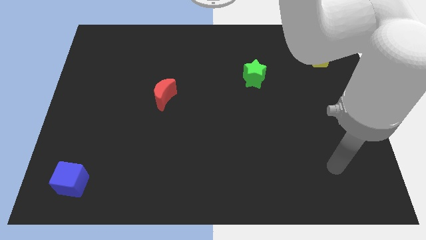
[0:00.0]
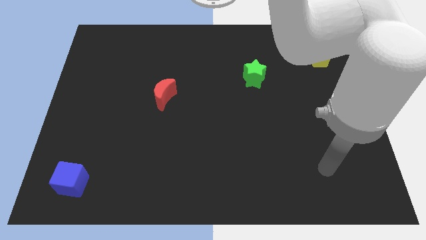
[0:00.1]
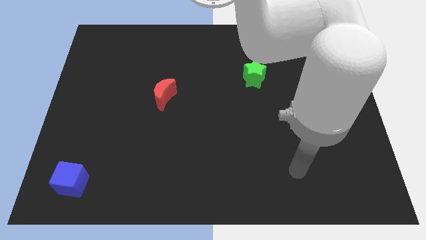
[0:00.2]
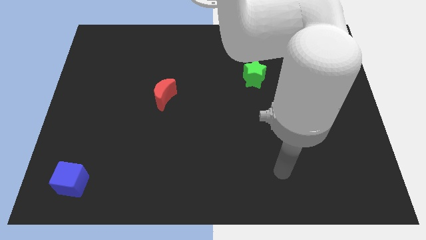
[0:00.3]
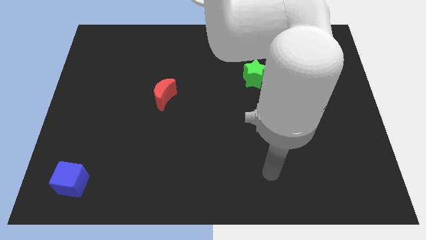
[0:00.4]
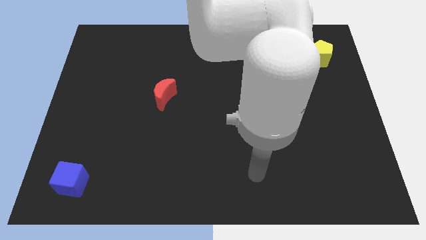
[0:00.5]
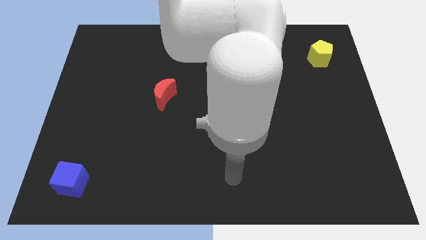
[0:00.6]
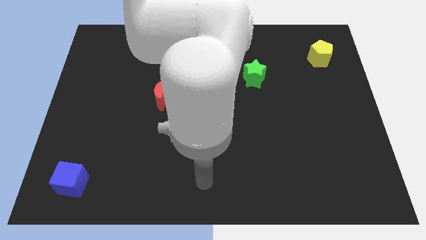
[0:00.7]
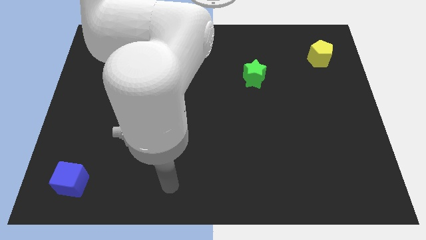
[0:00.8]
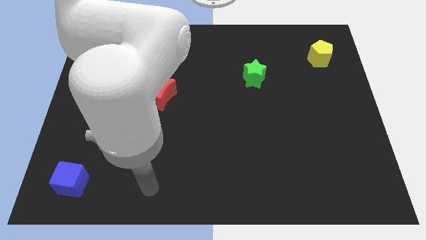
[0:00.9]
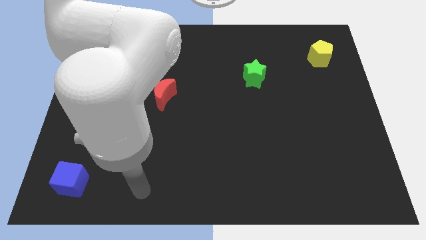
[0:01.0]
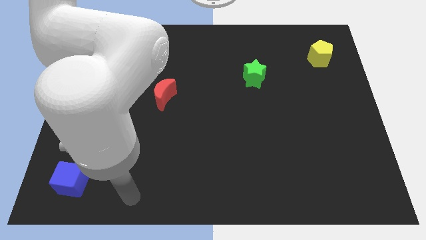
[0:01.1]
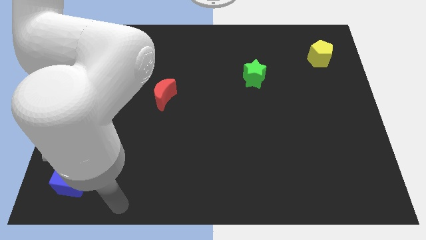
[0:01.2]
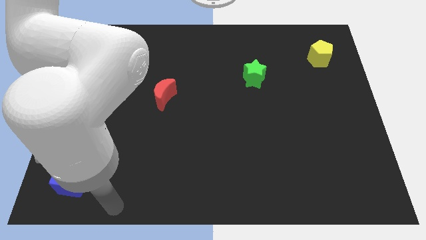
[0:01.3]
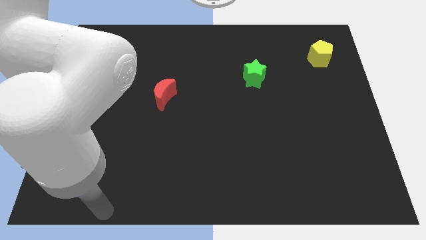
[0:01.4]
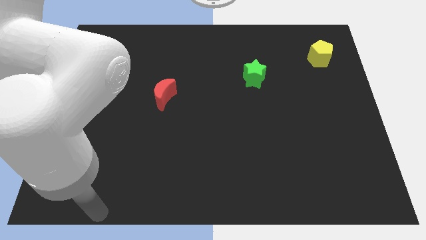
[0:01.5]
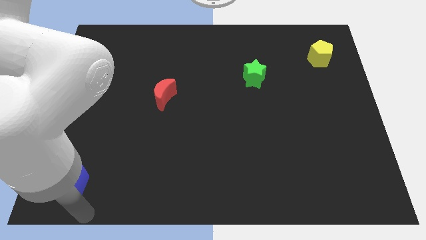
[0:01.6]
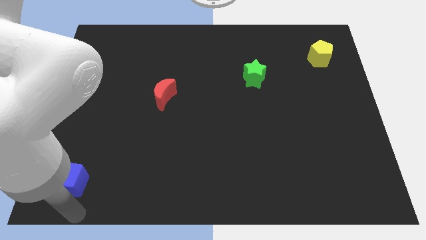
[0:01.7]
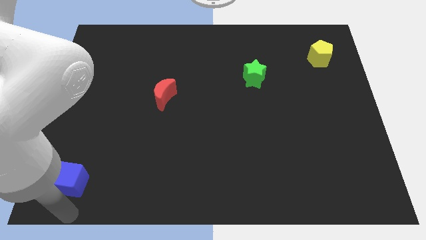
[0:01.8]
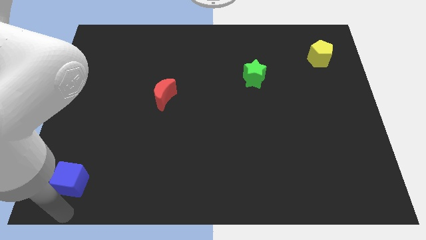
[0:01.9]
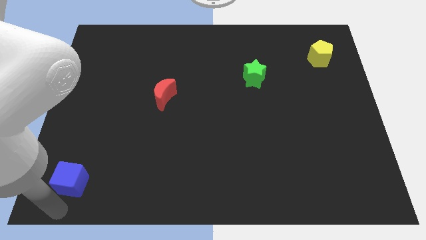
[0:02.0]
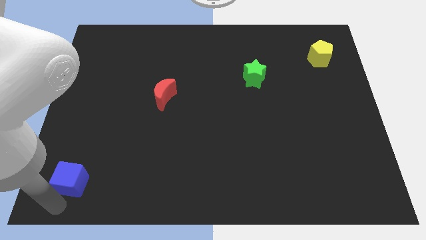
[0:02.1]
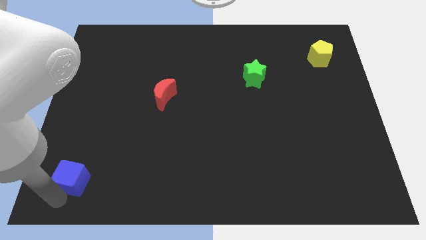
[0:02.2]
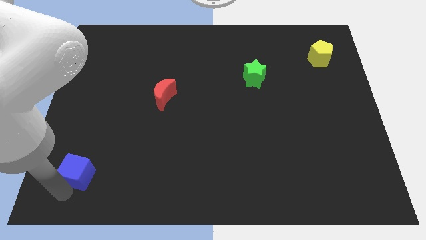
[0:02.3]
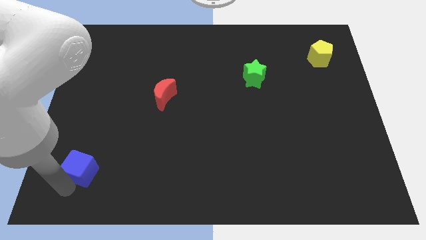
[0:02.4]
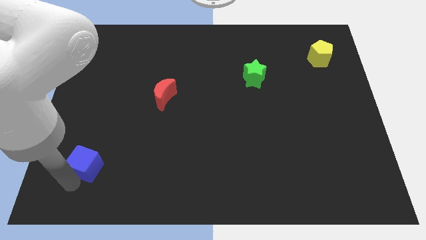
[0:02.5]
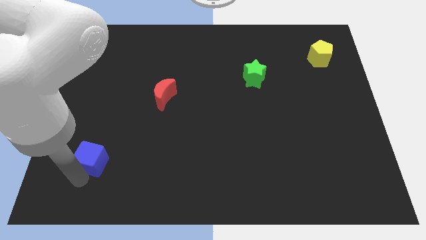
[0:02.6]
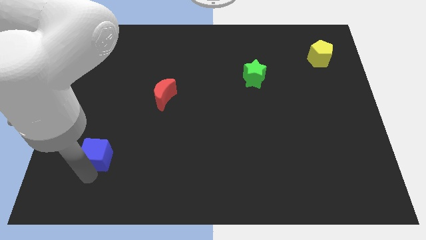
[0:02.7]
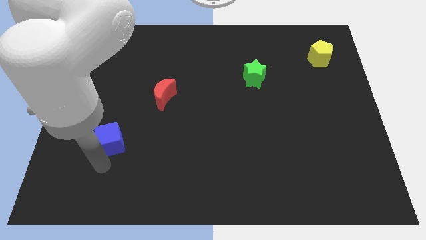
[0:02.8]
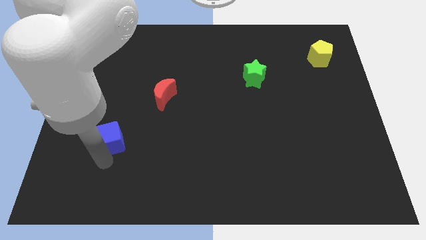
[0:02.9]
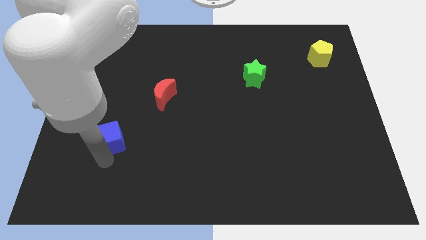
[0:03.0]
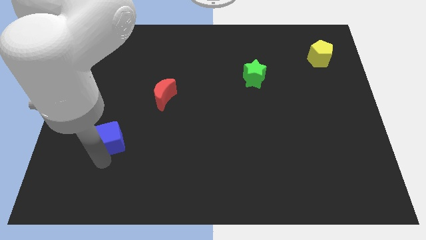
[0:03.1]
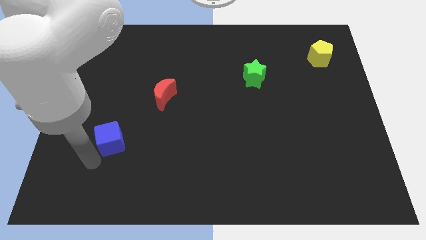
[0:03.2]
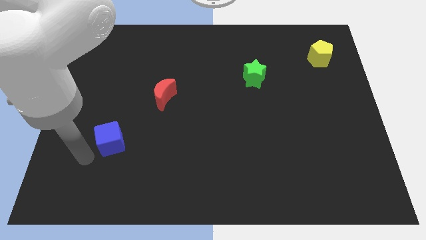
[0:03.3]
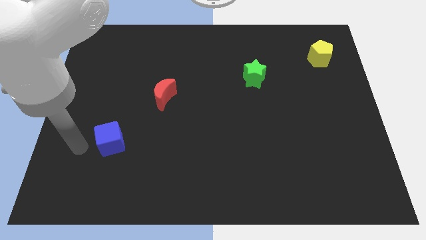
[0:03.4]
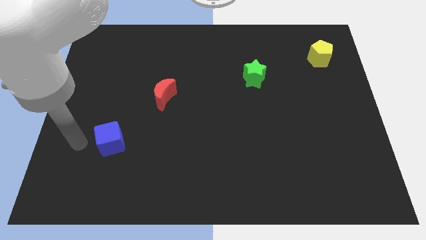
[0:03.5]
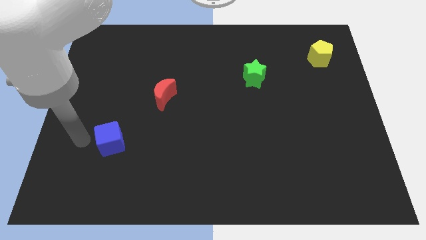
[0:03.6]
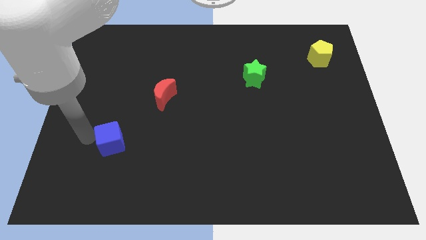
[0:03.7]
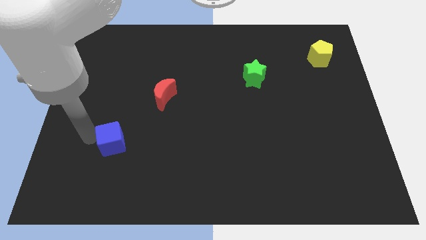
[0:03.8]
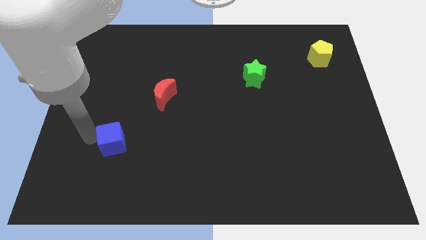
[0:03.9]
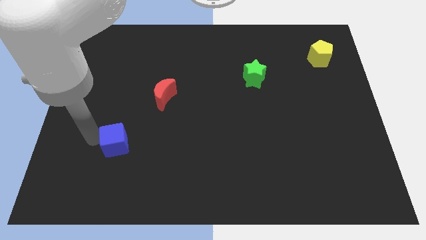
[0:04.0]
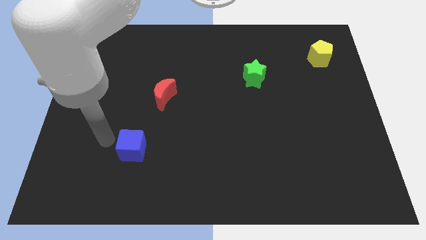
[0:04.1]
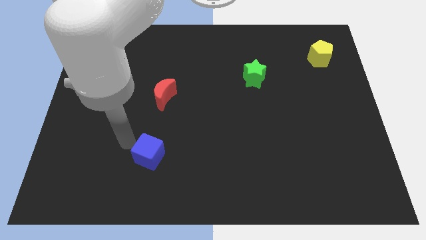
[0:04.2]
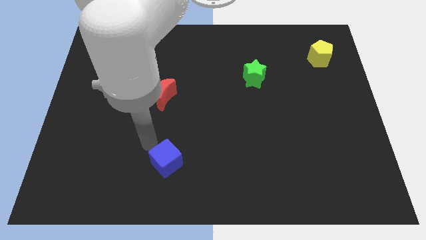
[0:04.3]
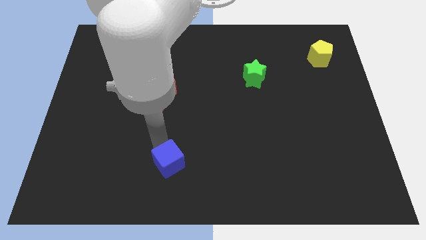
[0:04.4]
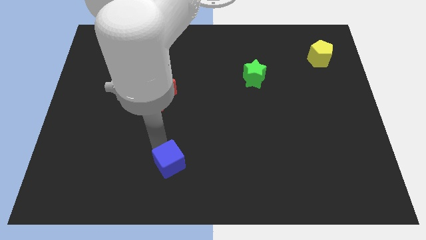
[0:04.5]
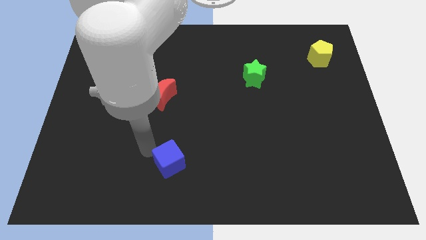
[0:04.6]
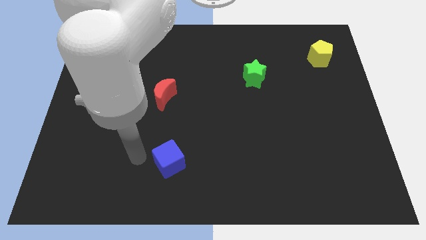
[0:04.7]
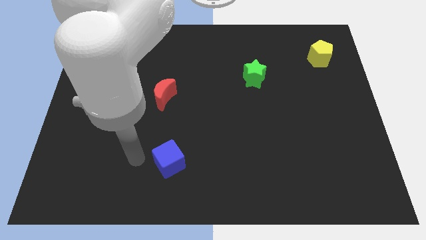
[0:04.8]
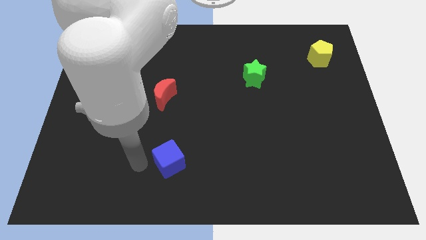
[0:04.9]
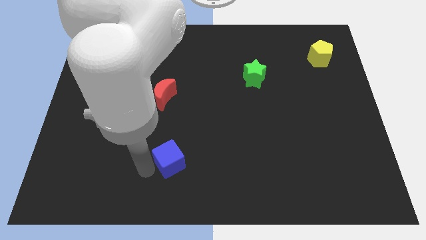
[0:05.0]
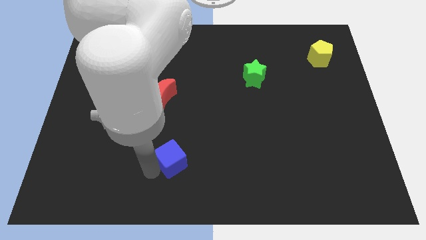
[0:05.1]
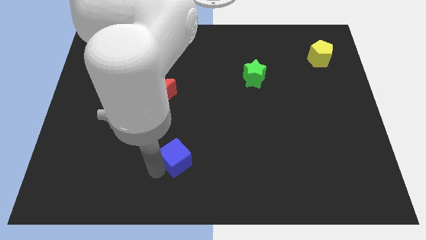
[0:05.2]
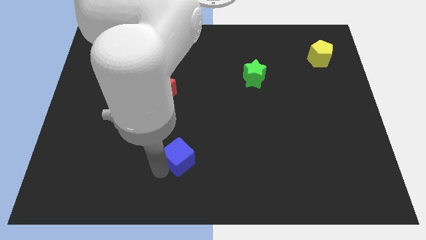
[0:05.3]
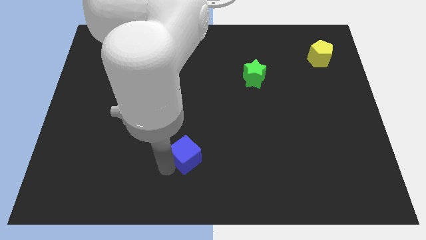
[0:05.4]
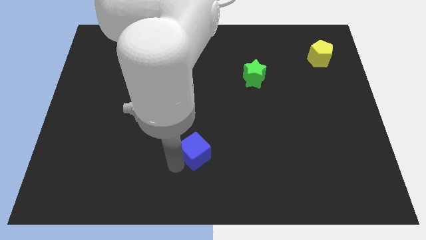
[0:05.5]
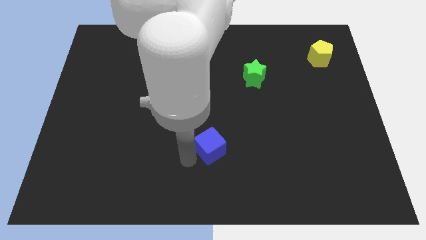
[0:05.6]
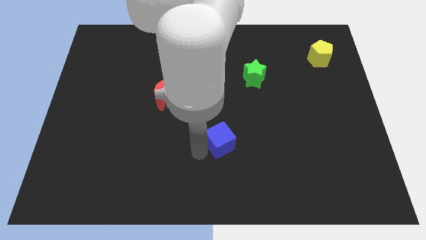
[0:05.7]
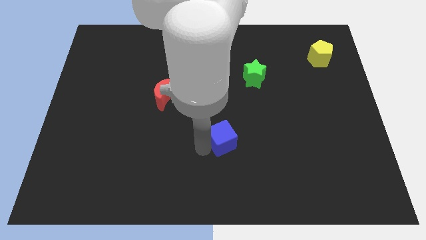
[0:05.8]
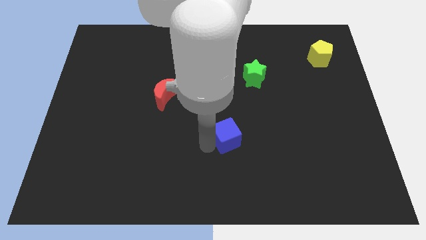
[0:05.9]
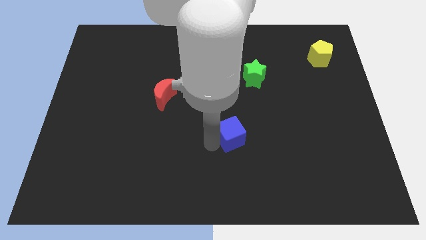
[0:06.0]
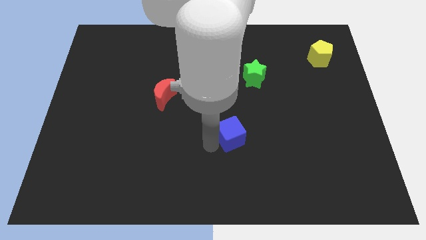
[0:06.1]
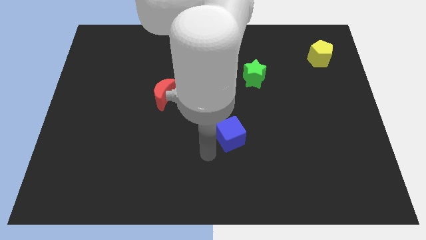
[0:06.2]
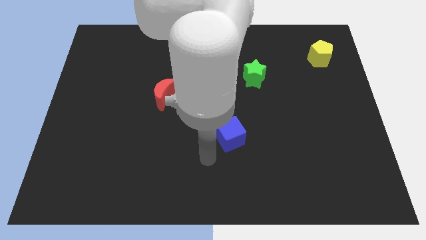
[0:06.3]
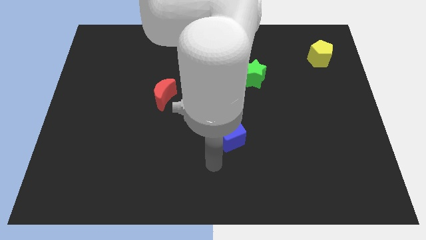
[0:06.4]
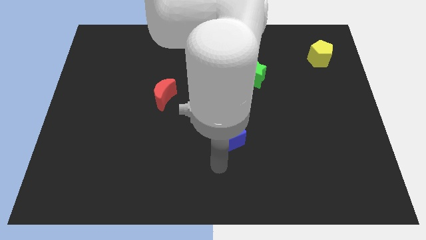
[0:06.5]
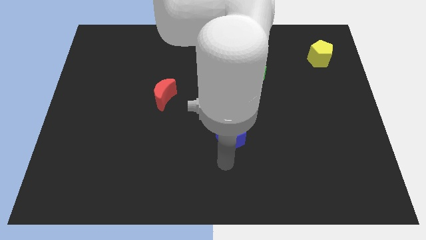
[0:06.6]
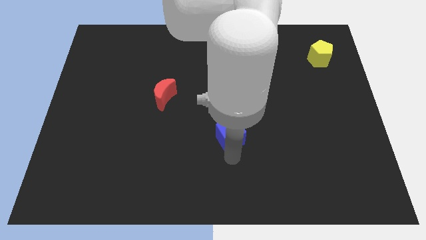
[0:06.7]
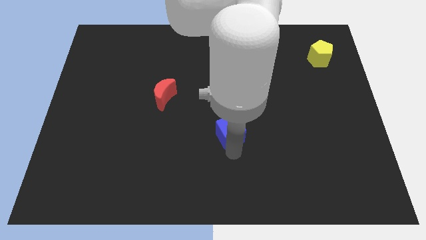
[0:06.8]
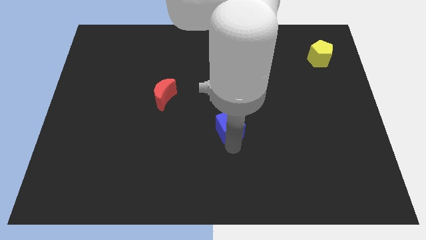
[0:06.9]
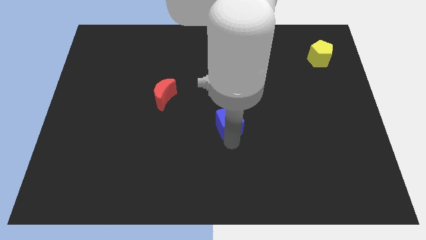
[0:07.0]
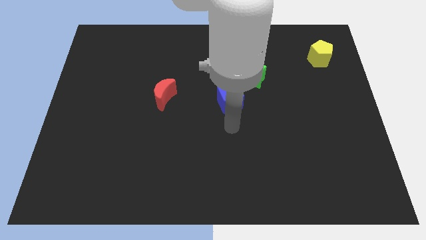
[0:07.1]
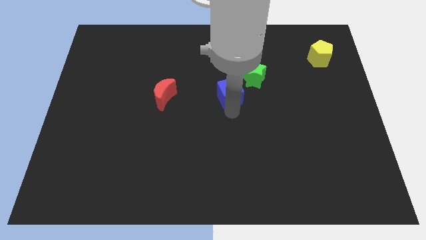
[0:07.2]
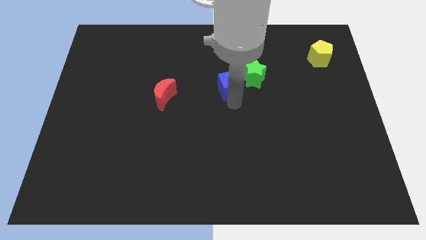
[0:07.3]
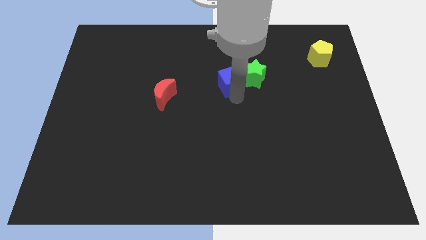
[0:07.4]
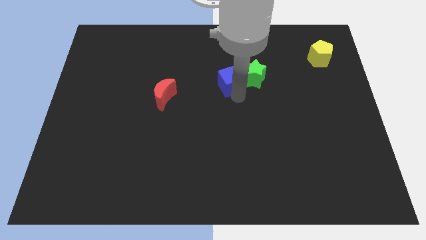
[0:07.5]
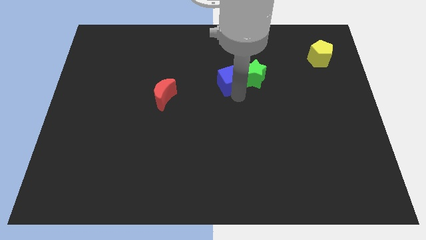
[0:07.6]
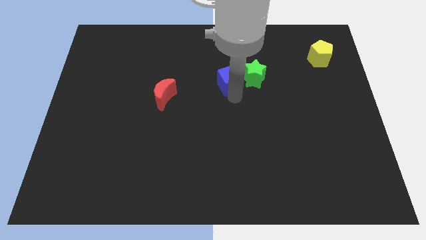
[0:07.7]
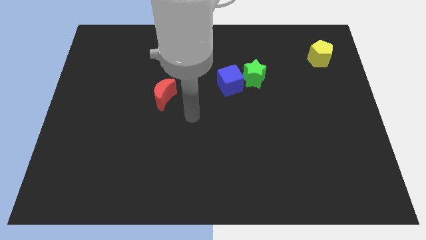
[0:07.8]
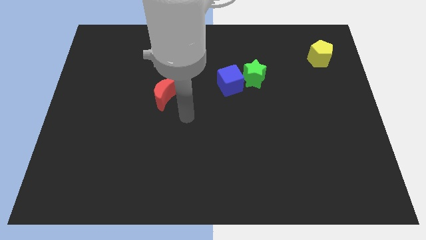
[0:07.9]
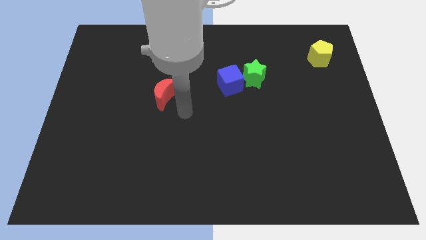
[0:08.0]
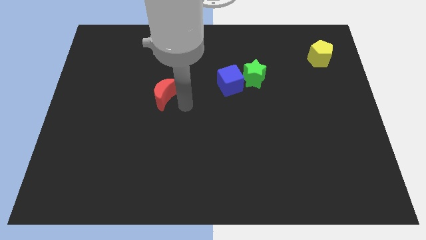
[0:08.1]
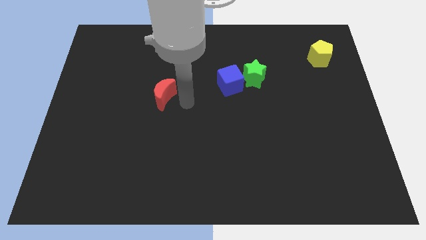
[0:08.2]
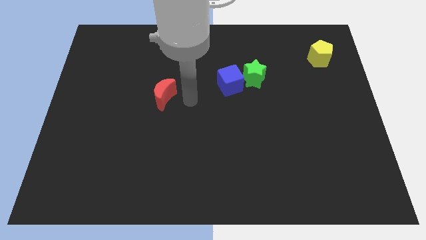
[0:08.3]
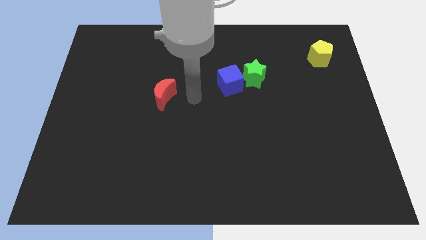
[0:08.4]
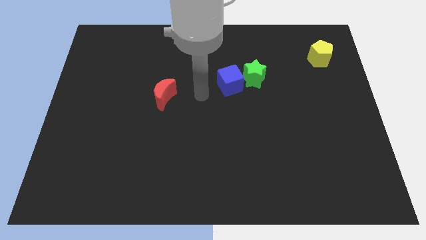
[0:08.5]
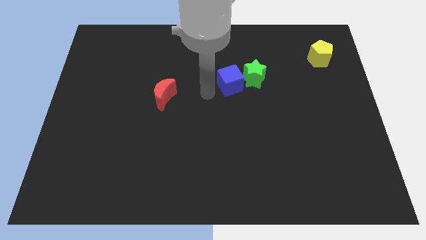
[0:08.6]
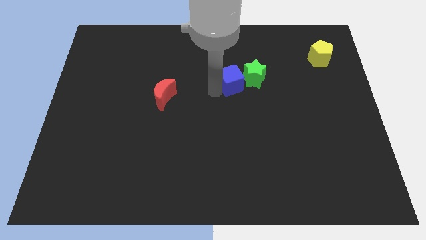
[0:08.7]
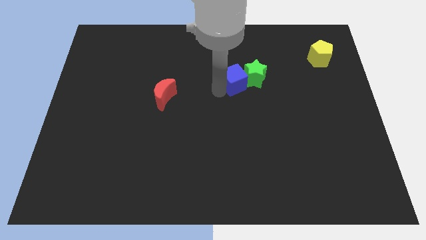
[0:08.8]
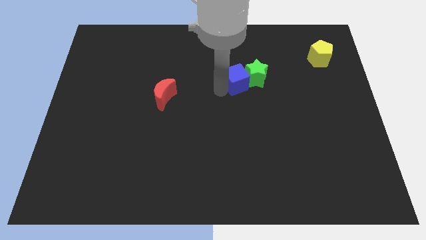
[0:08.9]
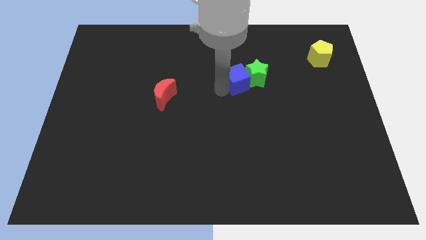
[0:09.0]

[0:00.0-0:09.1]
slide the blue block to the green block
